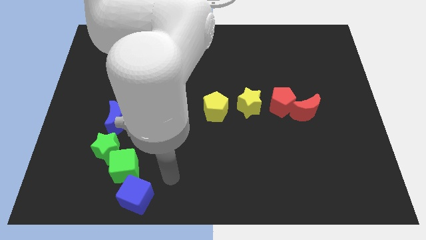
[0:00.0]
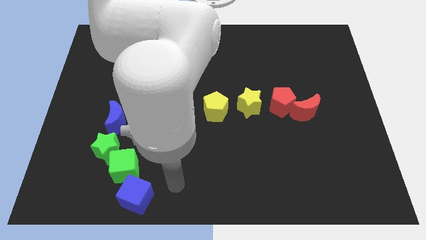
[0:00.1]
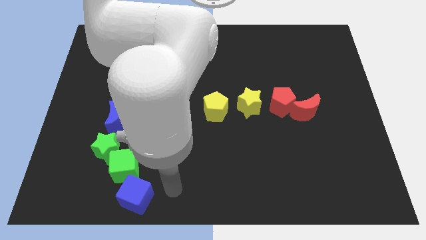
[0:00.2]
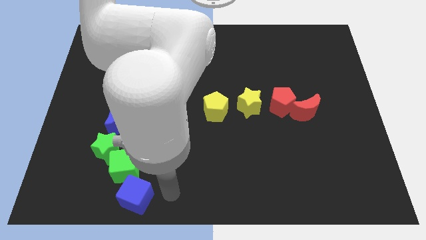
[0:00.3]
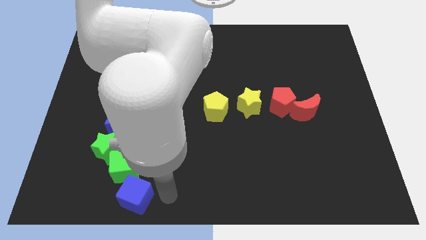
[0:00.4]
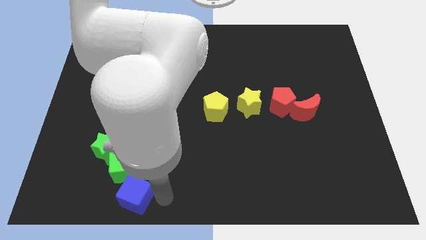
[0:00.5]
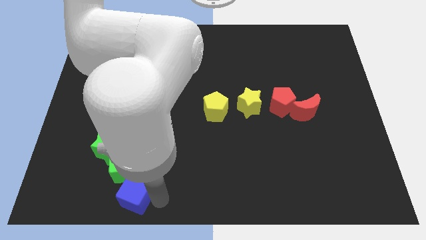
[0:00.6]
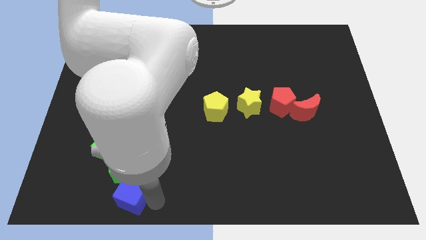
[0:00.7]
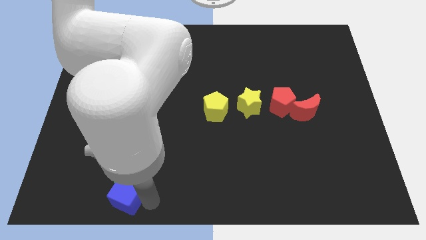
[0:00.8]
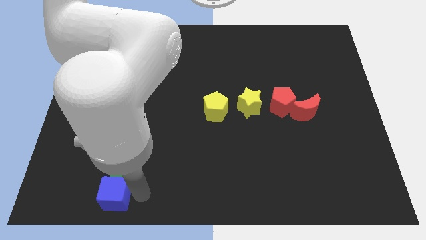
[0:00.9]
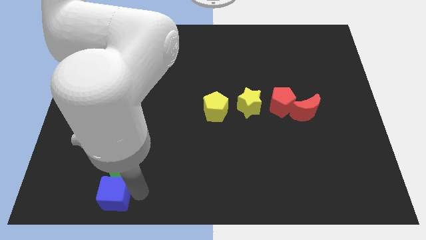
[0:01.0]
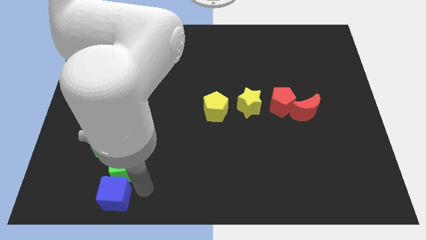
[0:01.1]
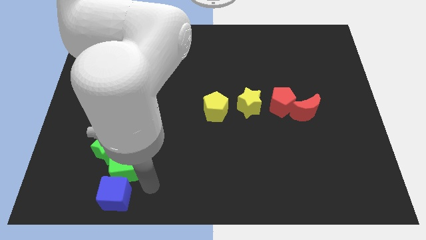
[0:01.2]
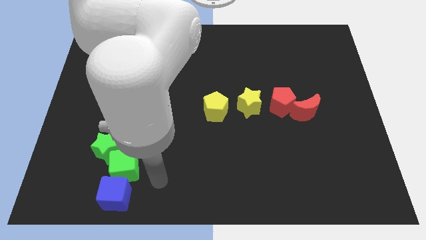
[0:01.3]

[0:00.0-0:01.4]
push the blue cube to bottom of green cube

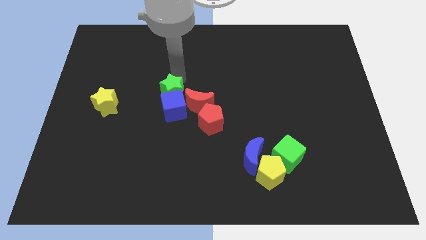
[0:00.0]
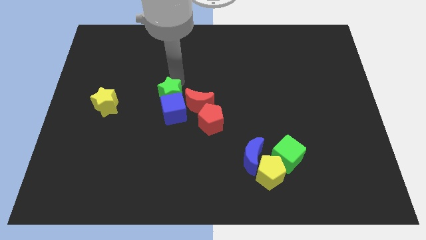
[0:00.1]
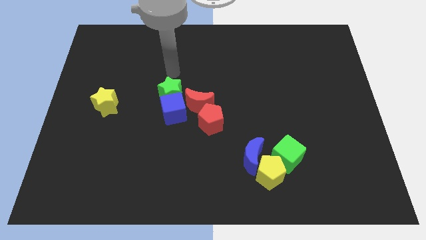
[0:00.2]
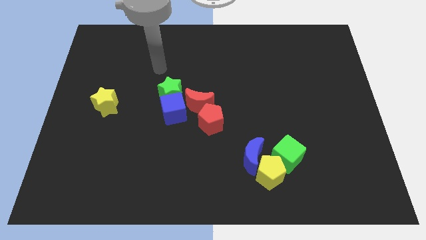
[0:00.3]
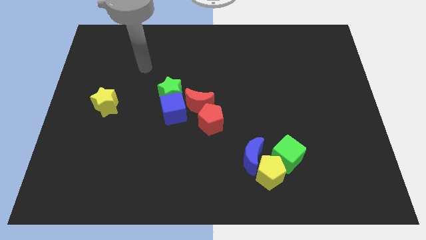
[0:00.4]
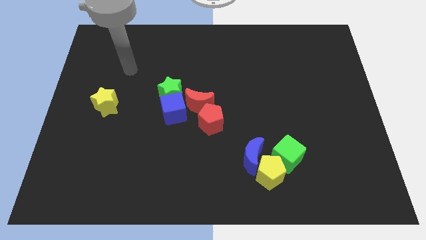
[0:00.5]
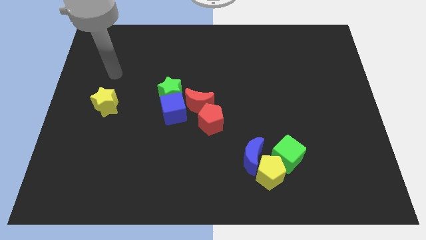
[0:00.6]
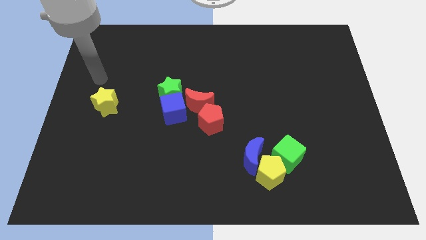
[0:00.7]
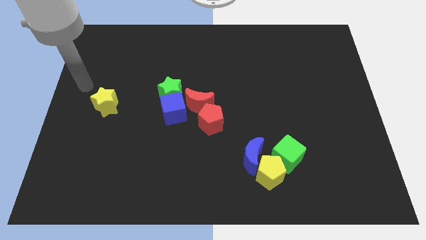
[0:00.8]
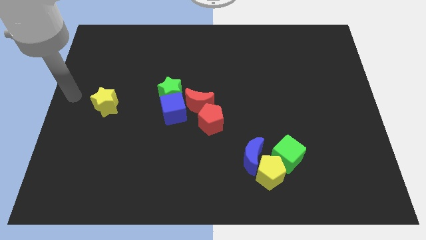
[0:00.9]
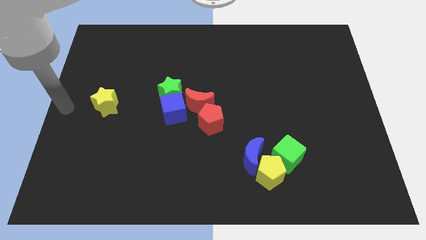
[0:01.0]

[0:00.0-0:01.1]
move the arm away from the green star

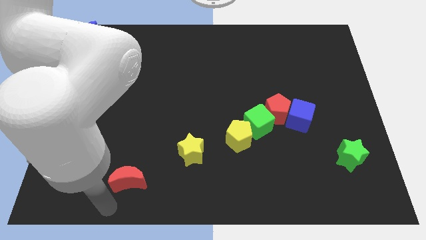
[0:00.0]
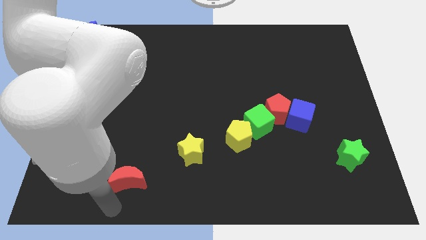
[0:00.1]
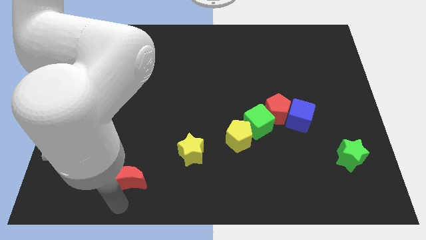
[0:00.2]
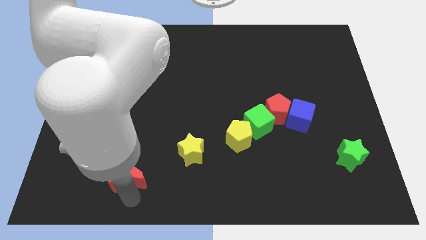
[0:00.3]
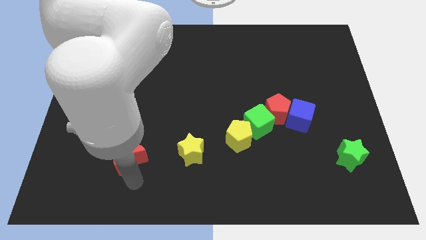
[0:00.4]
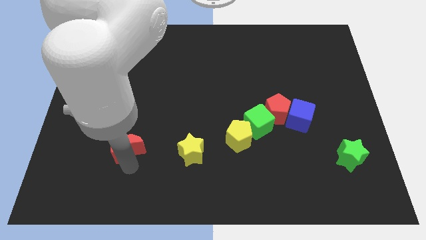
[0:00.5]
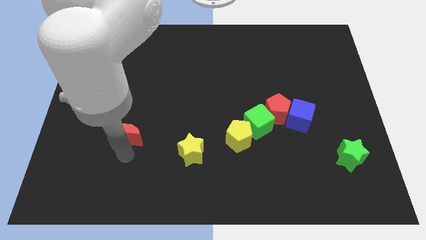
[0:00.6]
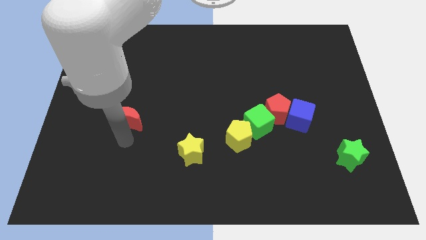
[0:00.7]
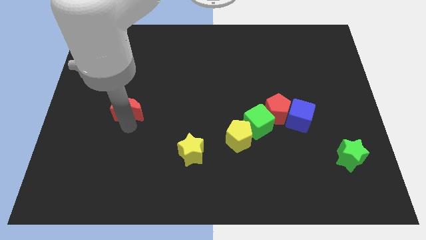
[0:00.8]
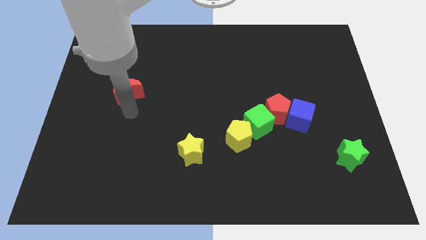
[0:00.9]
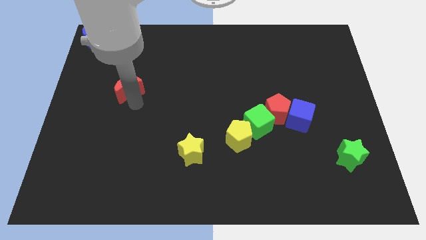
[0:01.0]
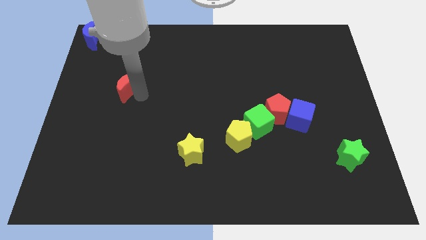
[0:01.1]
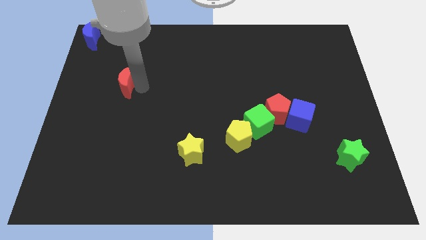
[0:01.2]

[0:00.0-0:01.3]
move the red crescent in between the blue crescent and yellow star

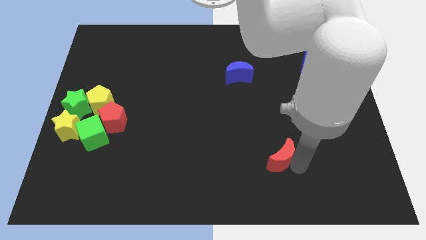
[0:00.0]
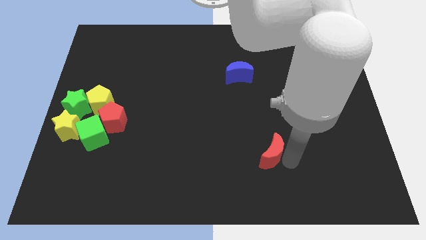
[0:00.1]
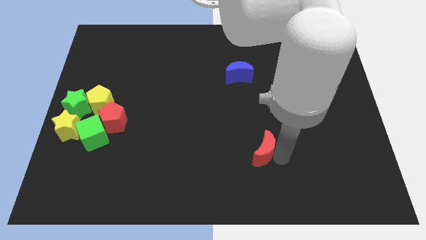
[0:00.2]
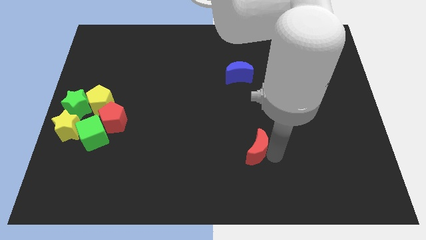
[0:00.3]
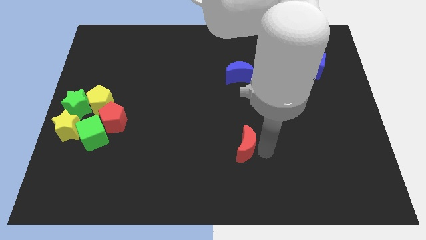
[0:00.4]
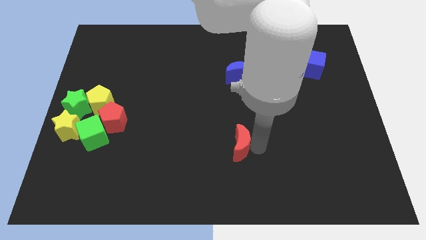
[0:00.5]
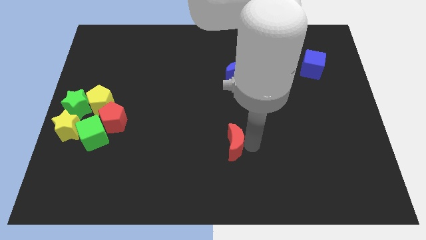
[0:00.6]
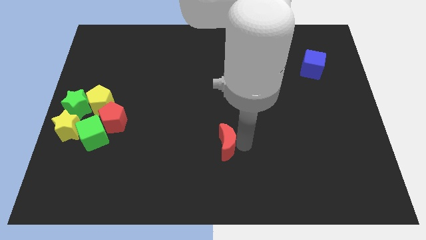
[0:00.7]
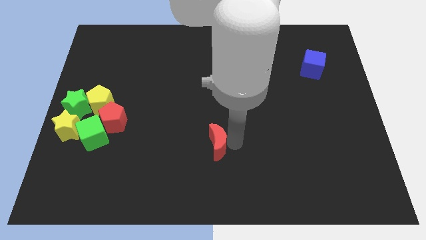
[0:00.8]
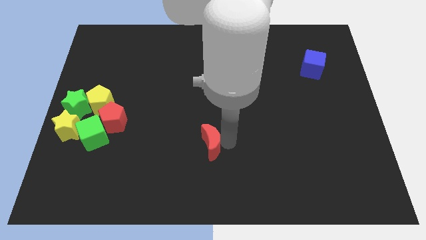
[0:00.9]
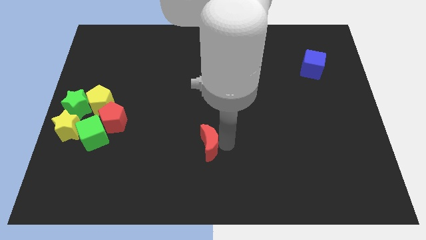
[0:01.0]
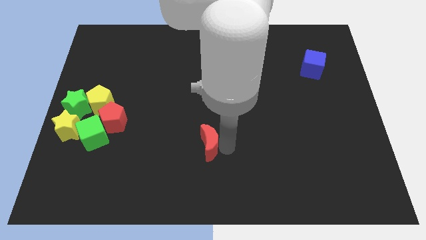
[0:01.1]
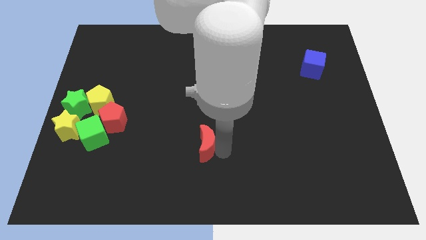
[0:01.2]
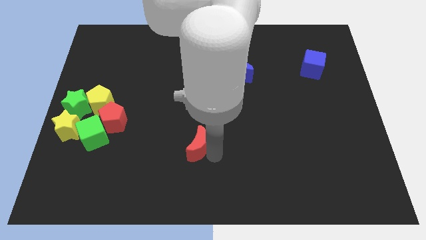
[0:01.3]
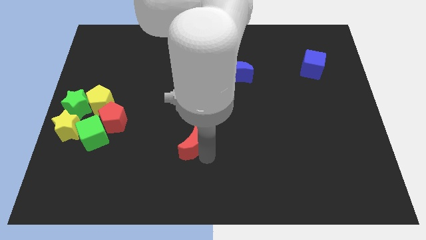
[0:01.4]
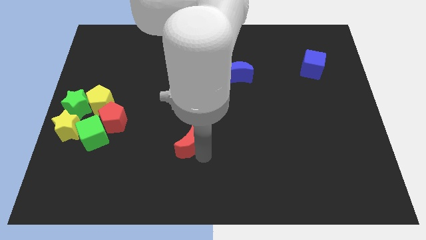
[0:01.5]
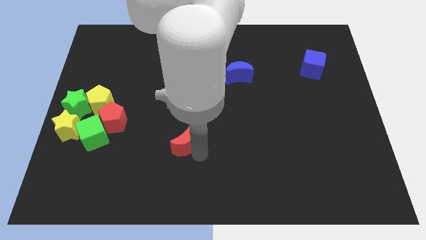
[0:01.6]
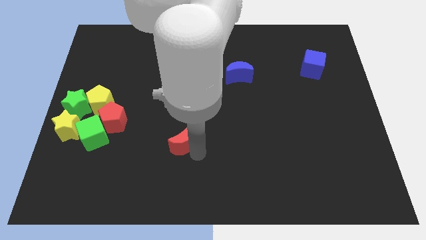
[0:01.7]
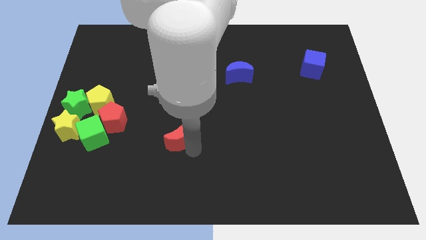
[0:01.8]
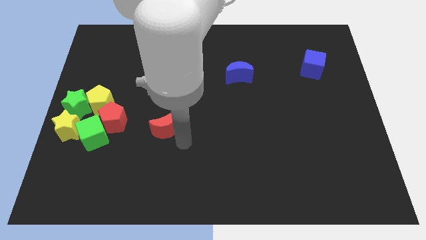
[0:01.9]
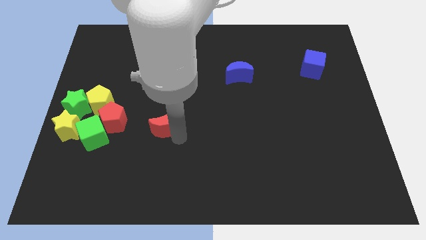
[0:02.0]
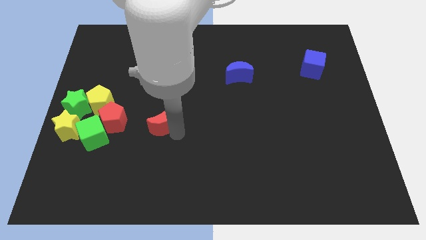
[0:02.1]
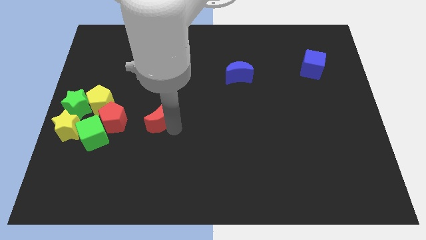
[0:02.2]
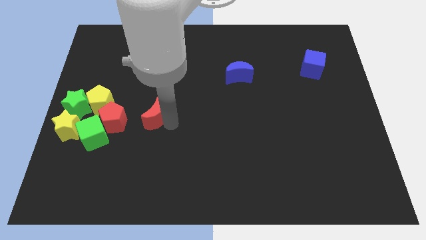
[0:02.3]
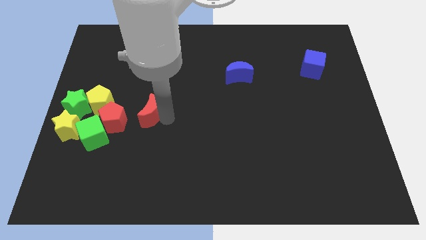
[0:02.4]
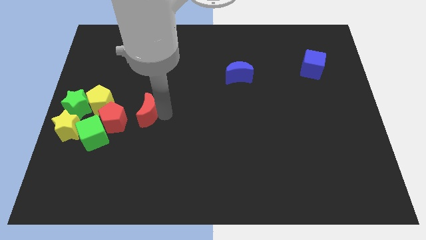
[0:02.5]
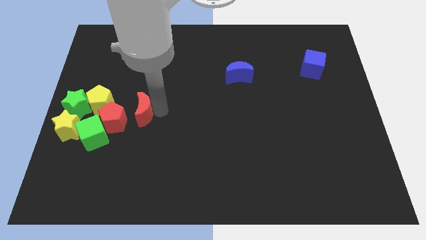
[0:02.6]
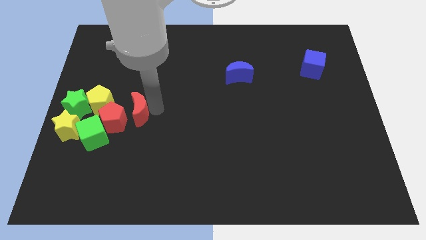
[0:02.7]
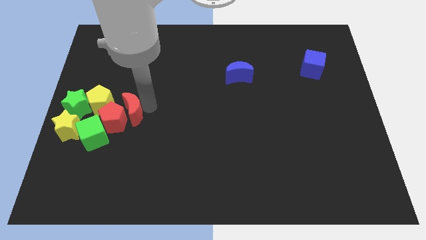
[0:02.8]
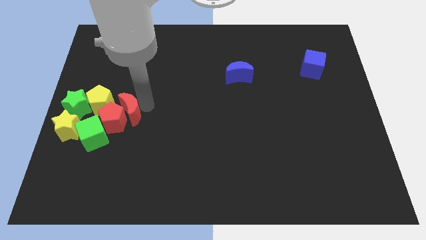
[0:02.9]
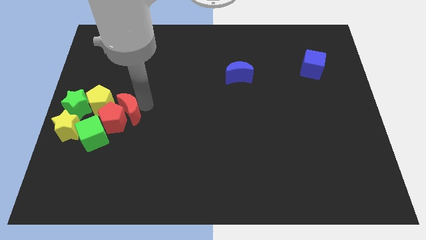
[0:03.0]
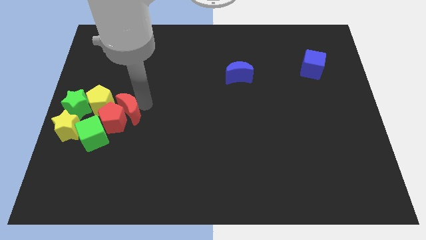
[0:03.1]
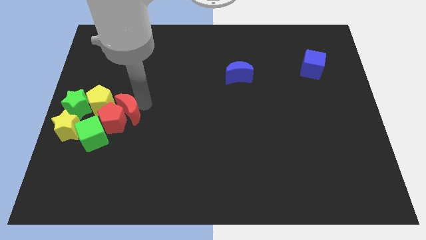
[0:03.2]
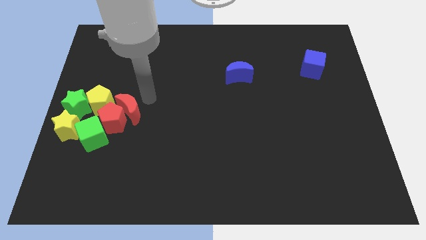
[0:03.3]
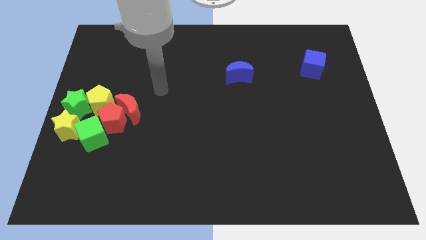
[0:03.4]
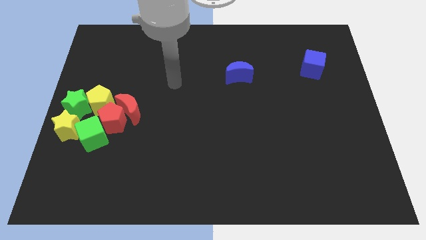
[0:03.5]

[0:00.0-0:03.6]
move the red crescent to the top right of the red pentagon

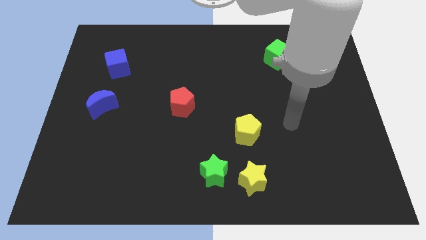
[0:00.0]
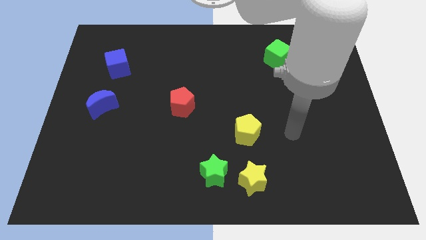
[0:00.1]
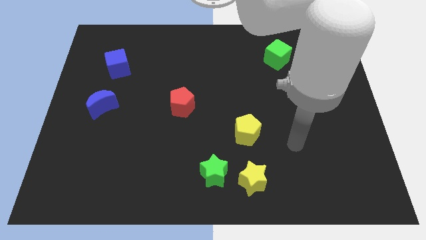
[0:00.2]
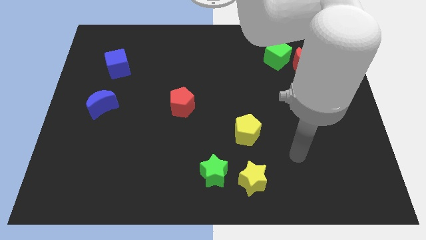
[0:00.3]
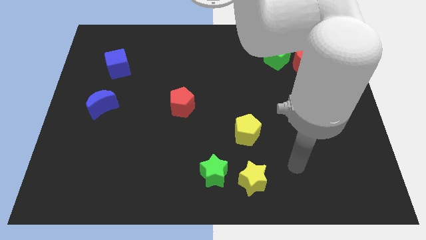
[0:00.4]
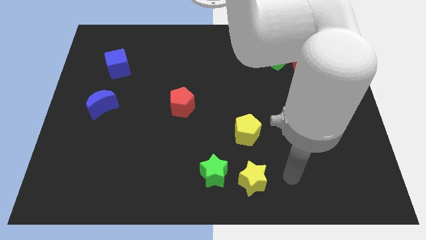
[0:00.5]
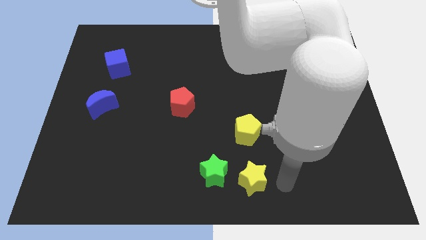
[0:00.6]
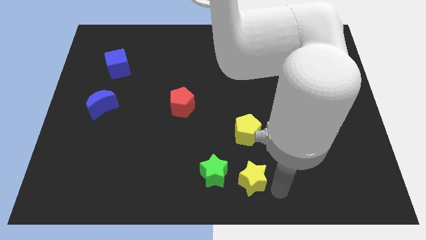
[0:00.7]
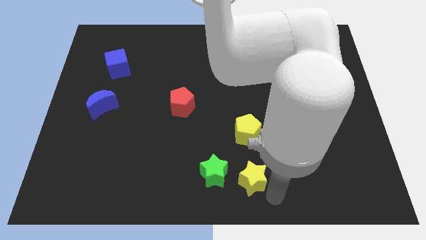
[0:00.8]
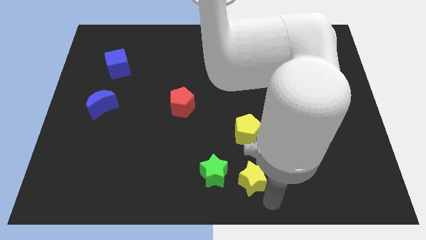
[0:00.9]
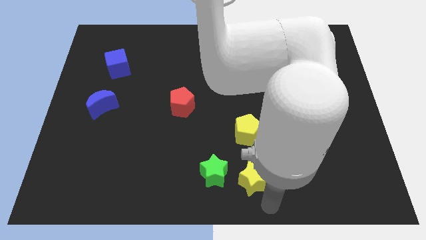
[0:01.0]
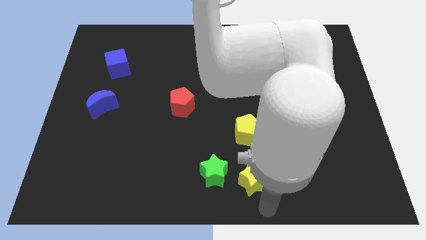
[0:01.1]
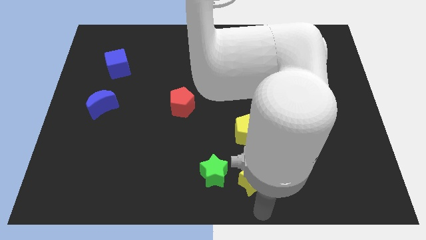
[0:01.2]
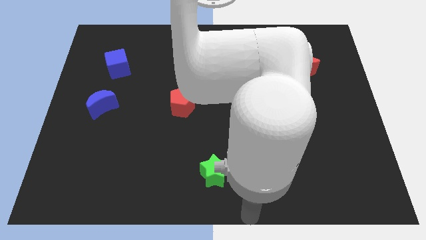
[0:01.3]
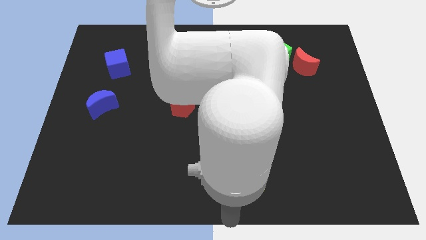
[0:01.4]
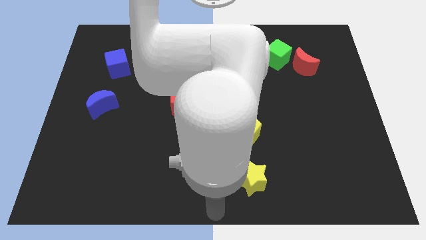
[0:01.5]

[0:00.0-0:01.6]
place your arm at the bottom centre of the board
